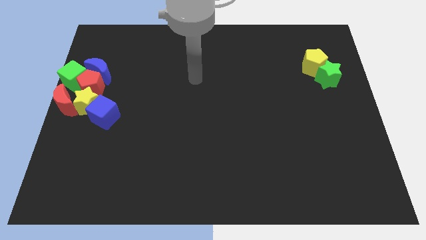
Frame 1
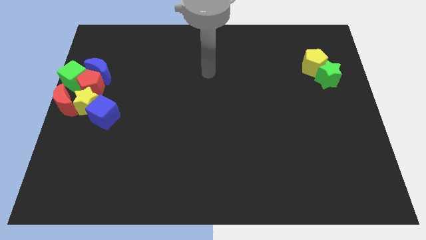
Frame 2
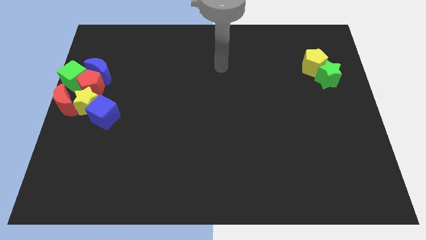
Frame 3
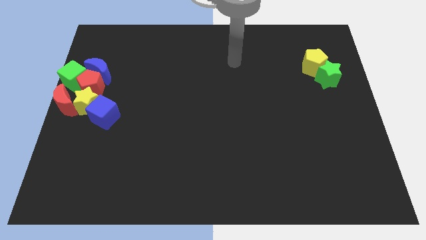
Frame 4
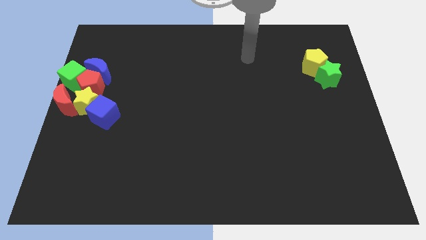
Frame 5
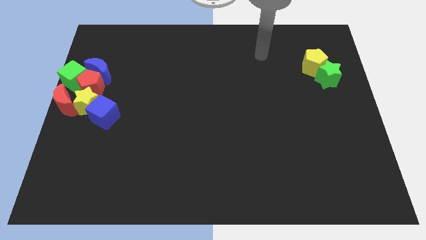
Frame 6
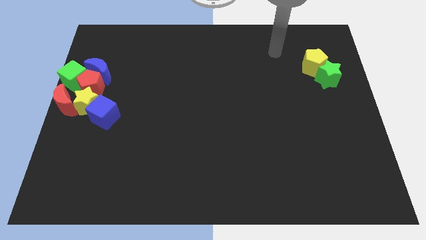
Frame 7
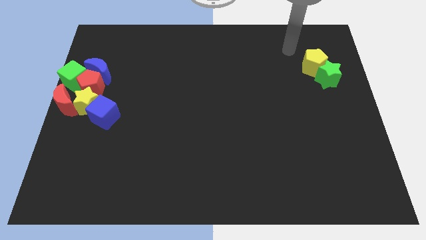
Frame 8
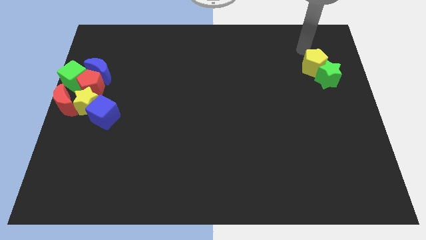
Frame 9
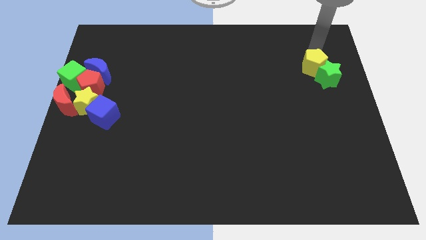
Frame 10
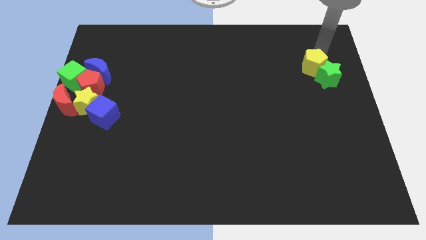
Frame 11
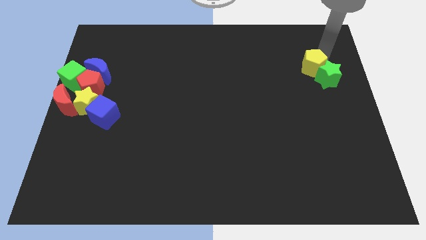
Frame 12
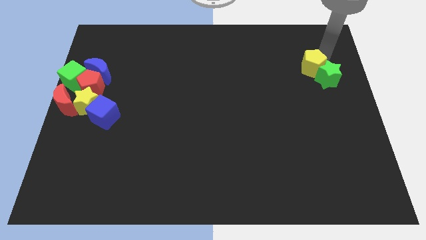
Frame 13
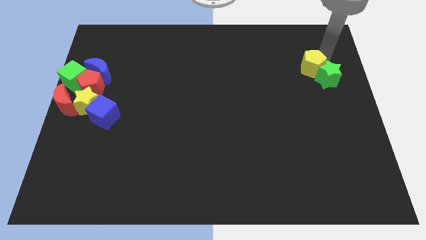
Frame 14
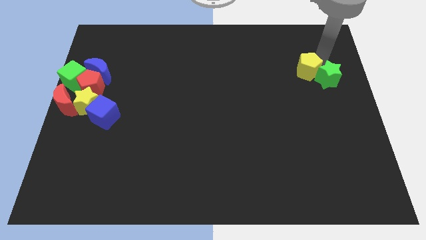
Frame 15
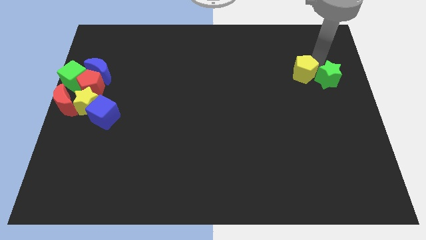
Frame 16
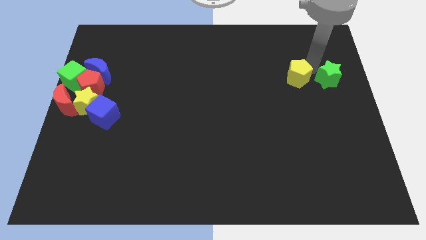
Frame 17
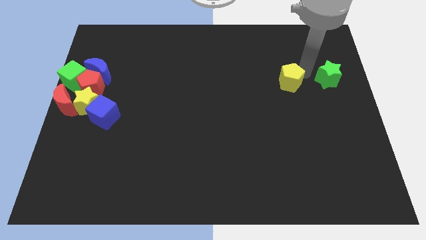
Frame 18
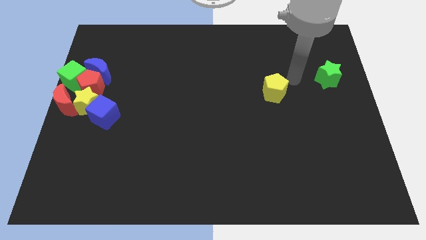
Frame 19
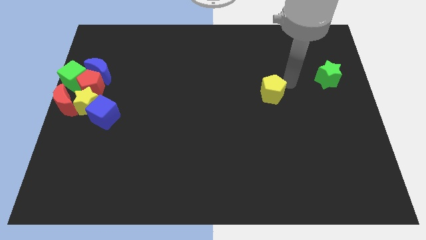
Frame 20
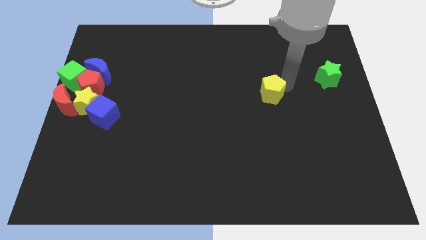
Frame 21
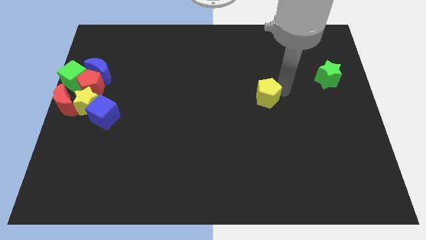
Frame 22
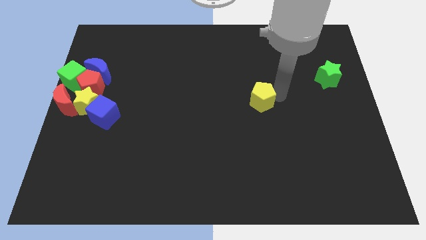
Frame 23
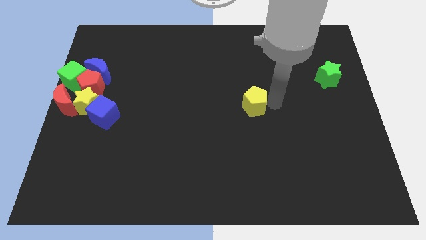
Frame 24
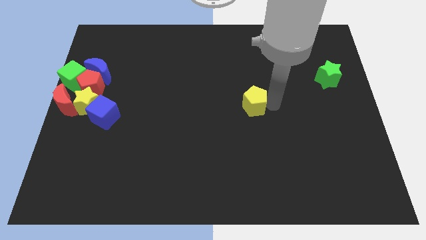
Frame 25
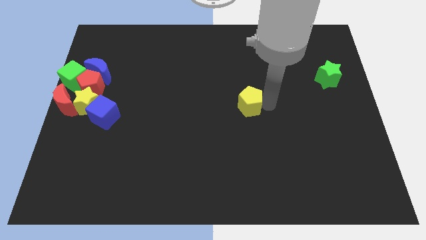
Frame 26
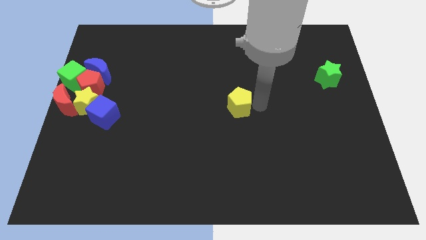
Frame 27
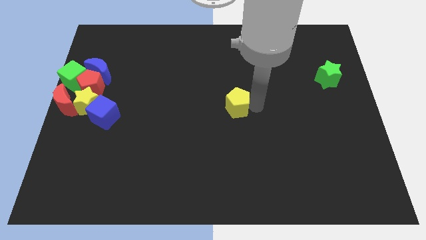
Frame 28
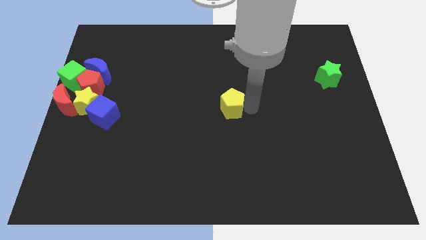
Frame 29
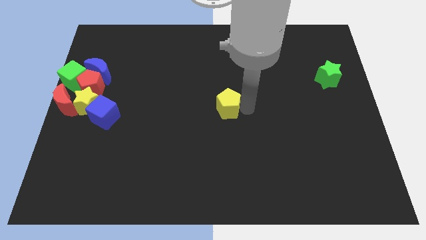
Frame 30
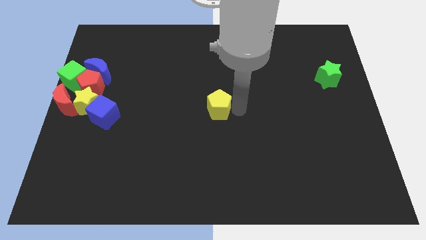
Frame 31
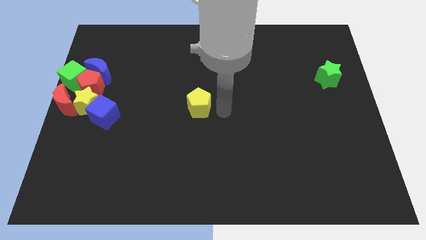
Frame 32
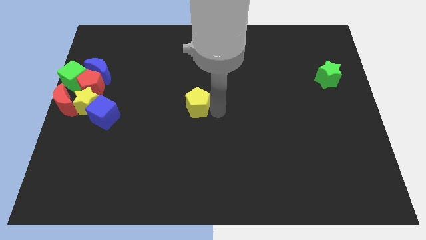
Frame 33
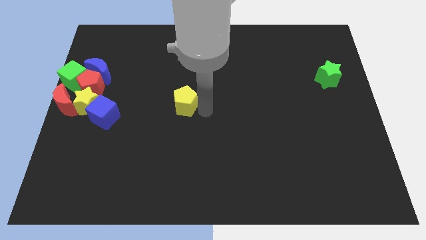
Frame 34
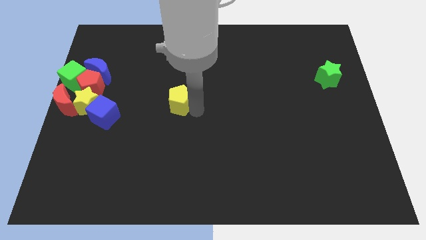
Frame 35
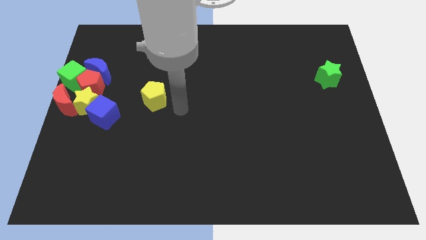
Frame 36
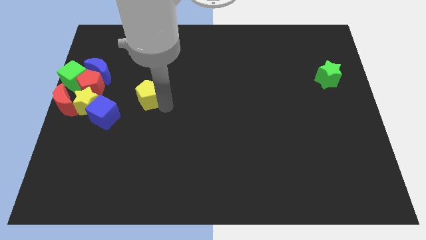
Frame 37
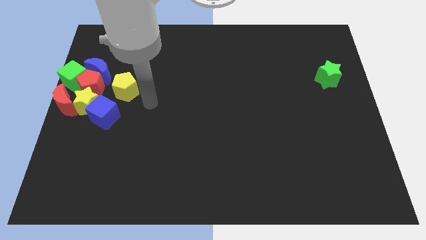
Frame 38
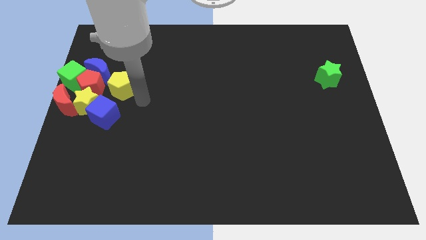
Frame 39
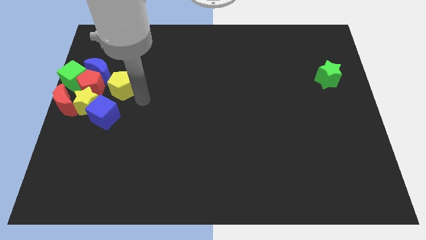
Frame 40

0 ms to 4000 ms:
push the yellow pentagon towards the center left of the board

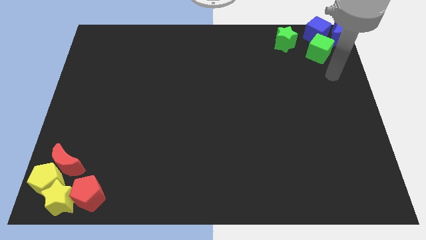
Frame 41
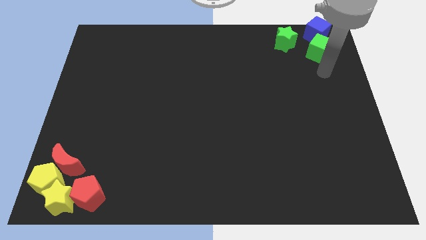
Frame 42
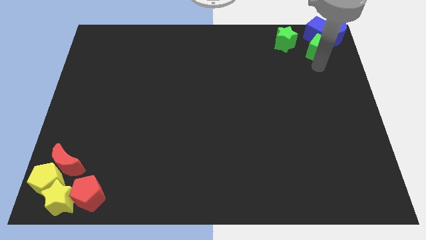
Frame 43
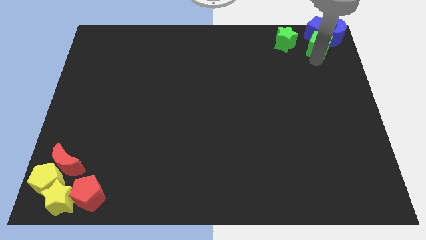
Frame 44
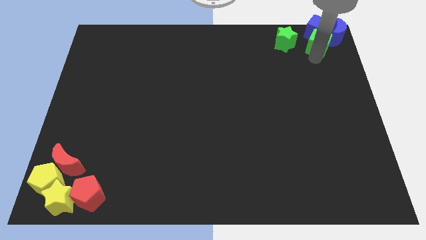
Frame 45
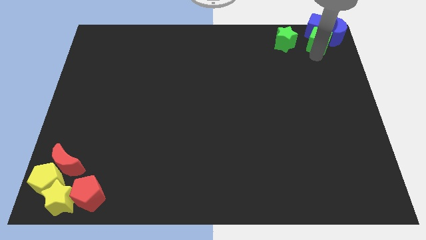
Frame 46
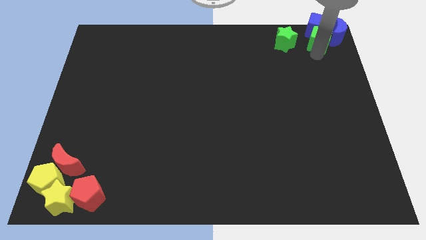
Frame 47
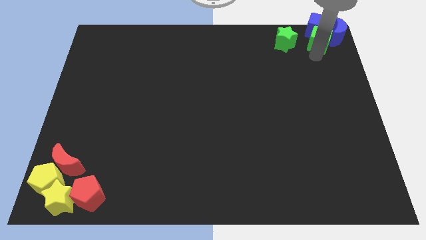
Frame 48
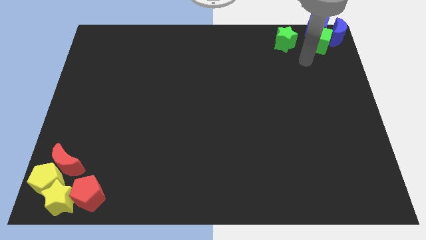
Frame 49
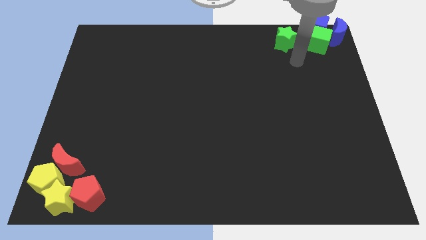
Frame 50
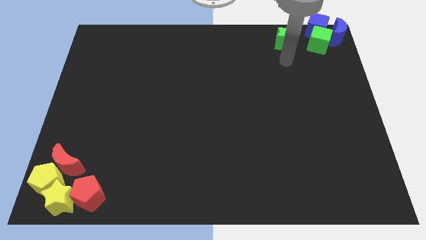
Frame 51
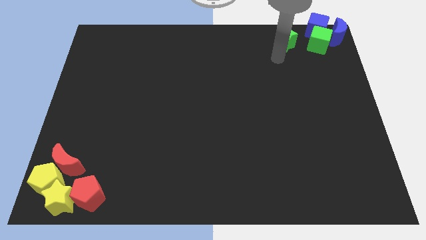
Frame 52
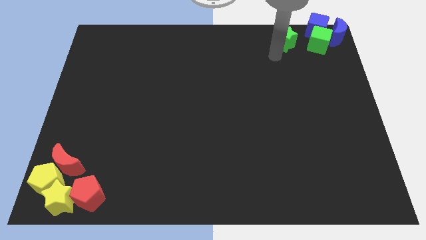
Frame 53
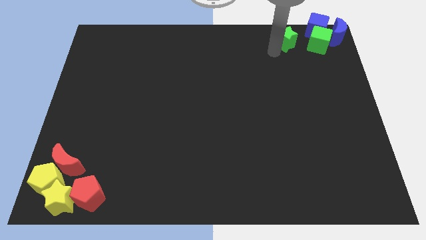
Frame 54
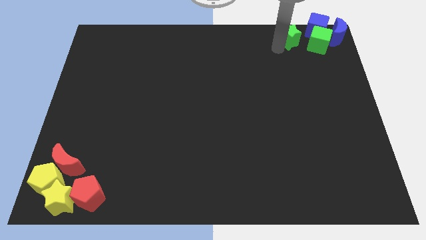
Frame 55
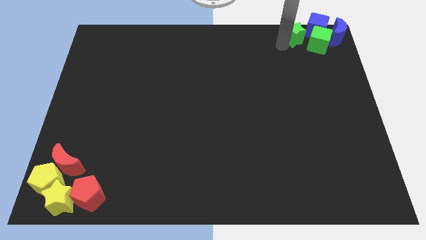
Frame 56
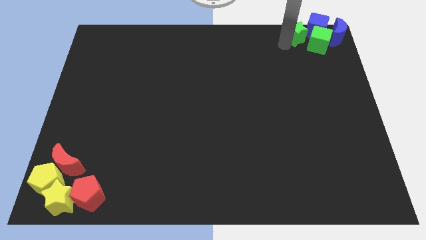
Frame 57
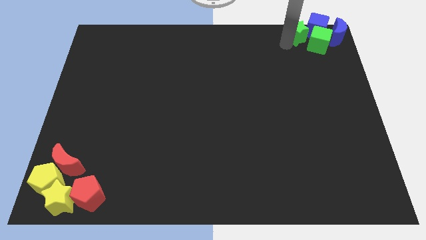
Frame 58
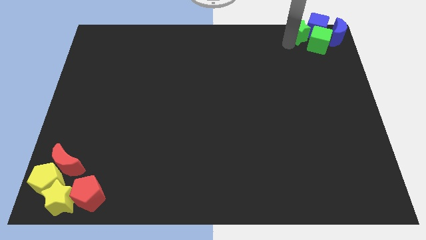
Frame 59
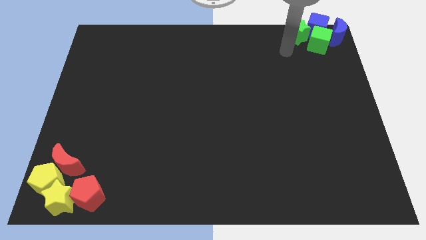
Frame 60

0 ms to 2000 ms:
group up the green blocks with the blue blocks at the top right of the board

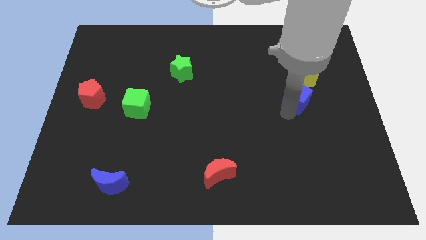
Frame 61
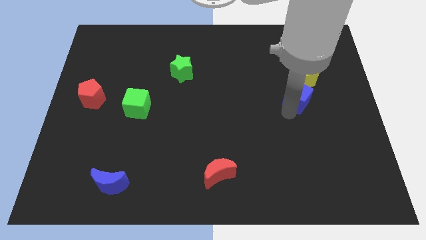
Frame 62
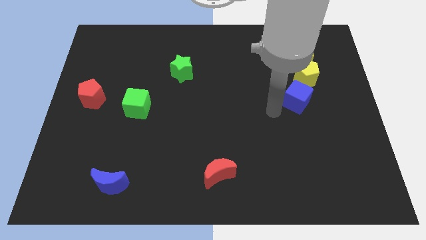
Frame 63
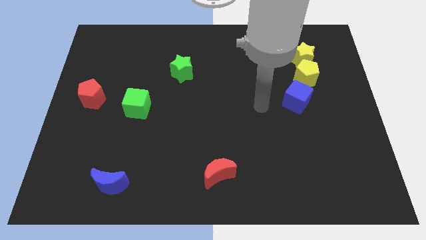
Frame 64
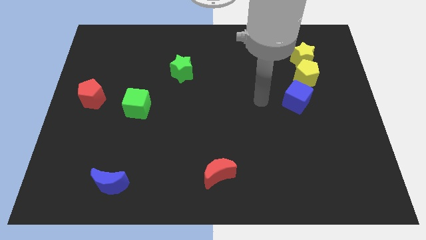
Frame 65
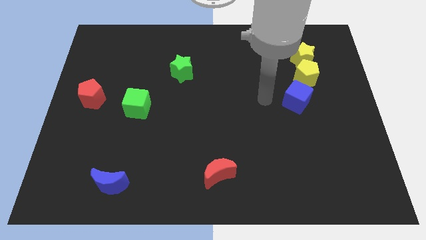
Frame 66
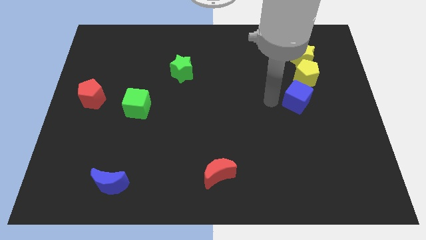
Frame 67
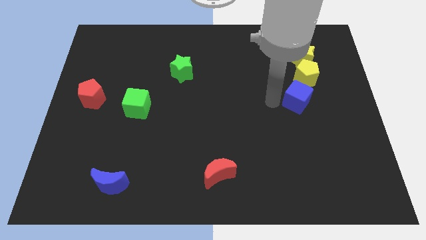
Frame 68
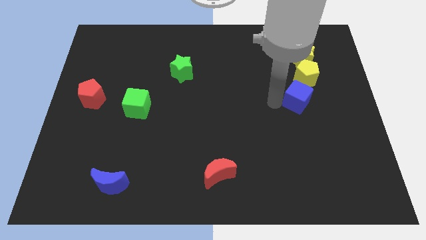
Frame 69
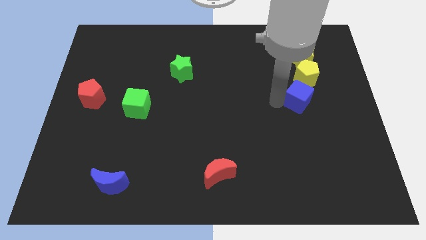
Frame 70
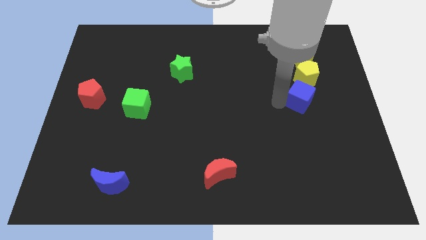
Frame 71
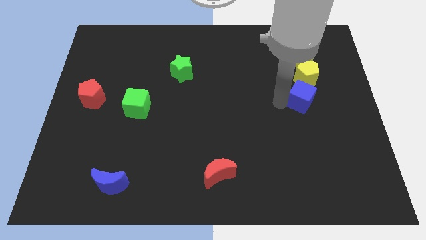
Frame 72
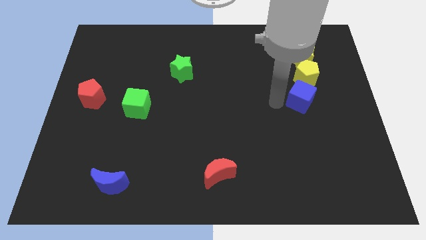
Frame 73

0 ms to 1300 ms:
place the blue cube below the yellow pentagon

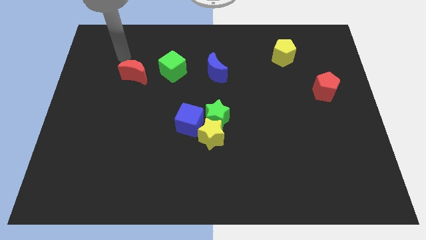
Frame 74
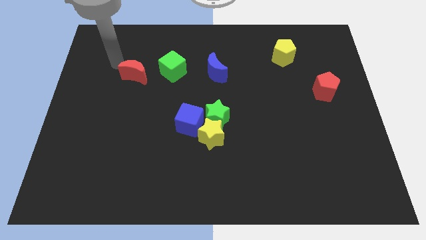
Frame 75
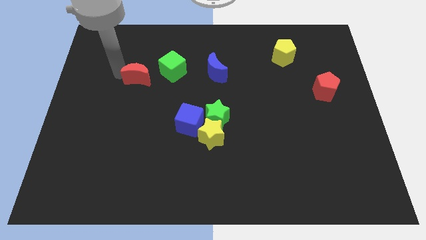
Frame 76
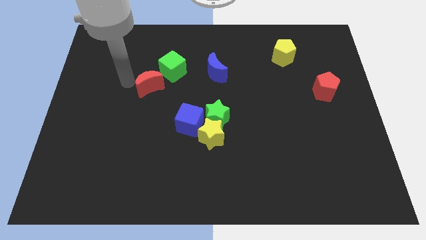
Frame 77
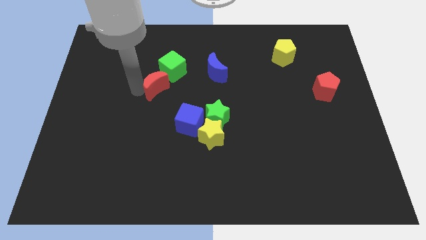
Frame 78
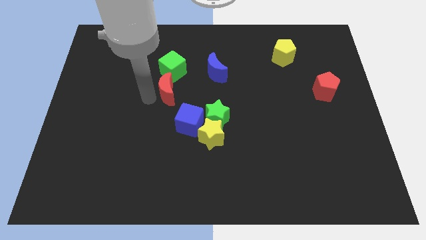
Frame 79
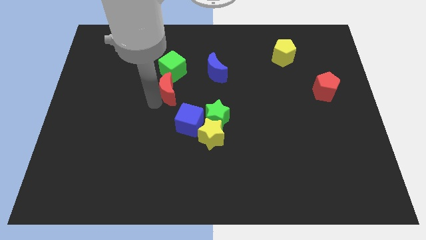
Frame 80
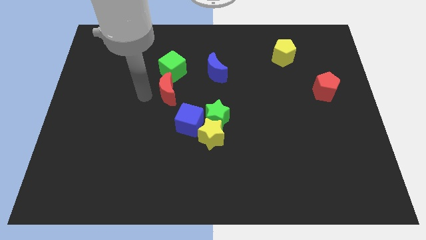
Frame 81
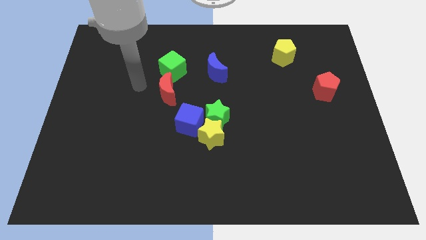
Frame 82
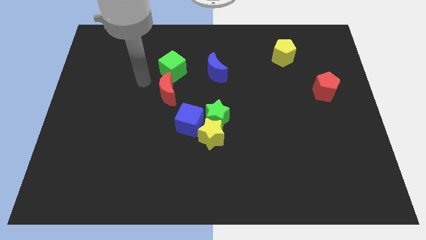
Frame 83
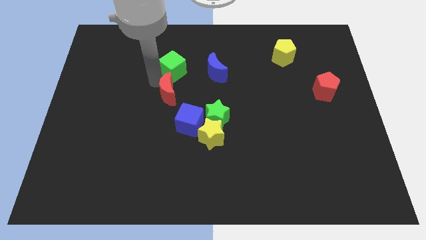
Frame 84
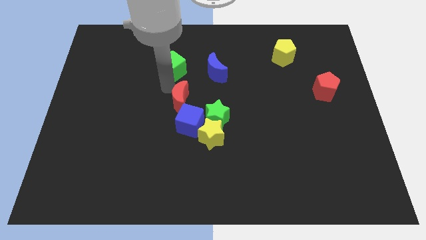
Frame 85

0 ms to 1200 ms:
place the red crescent in between the green cube and blue cube

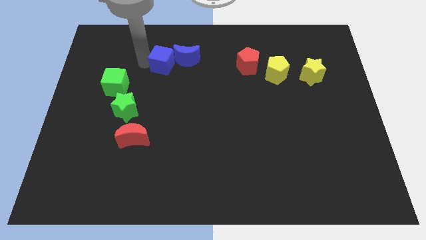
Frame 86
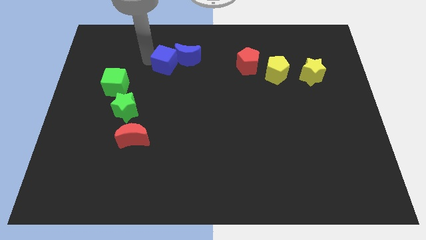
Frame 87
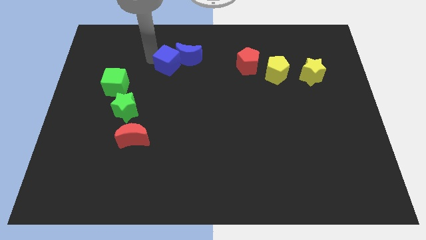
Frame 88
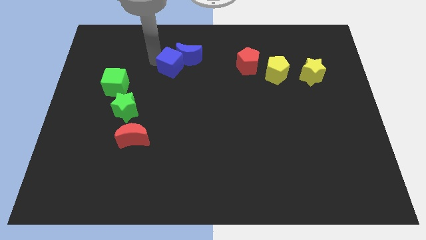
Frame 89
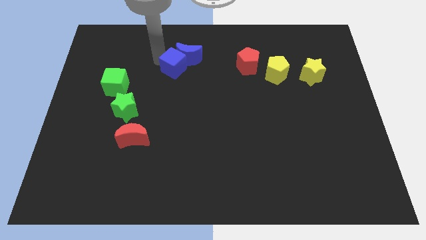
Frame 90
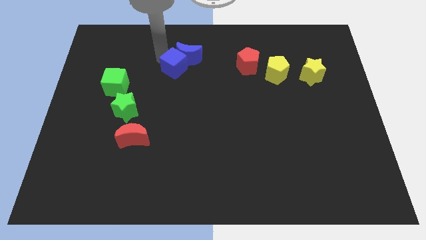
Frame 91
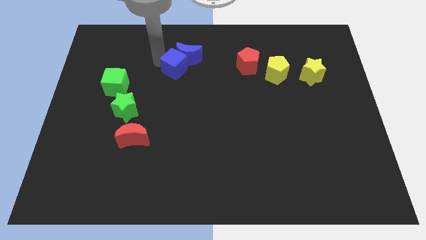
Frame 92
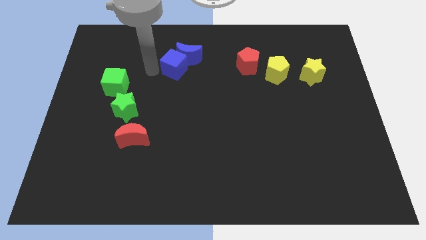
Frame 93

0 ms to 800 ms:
move the blue cube right to the blue crescent
